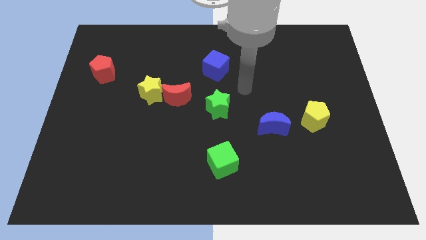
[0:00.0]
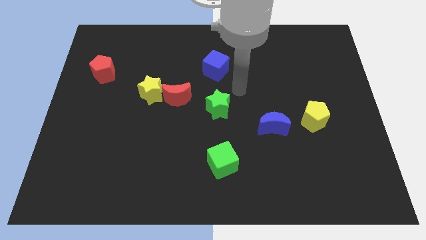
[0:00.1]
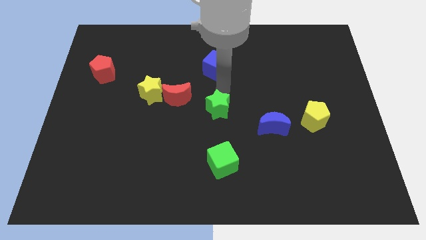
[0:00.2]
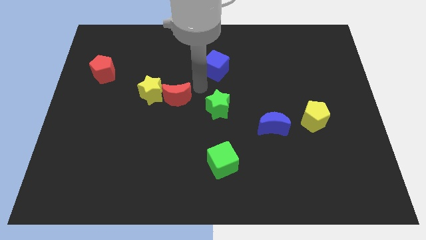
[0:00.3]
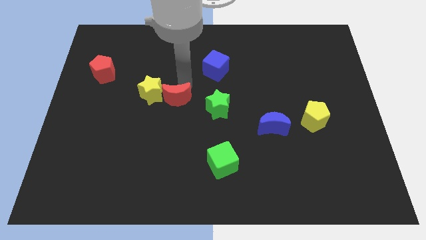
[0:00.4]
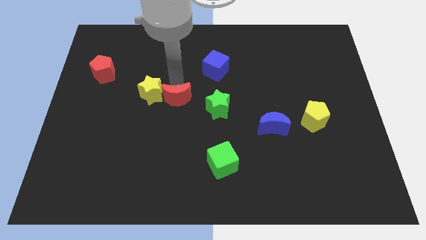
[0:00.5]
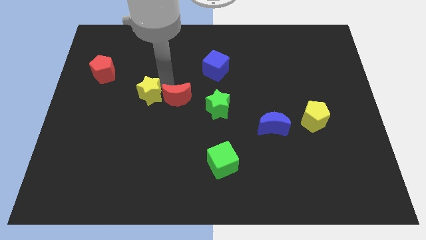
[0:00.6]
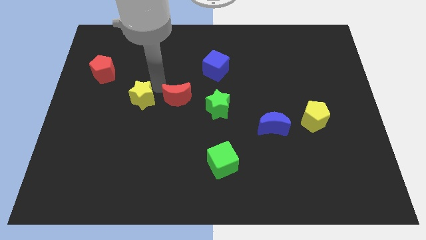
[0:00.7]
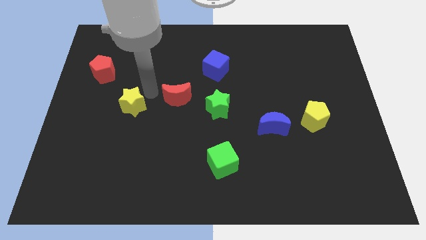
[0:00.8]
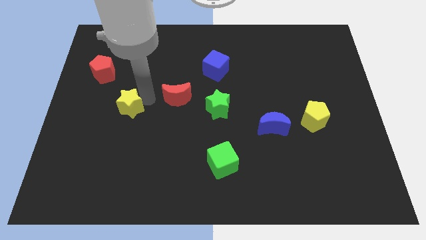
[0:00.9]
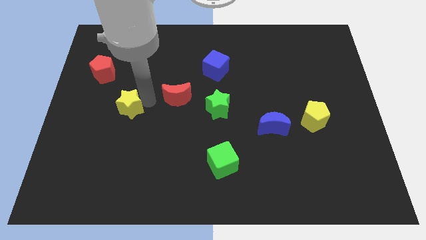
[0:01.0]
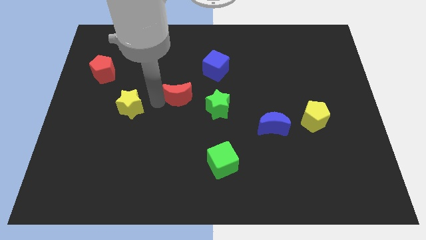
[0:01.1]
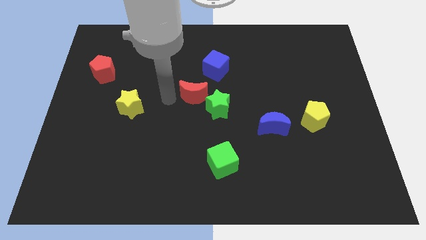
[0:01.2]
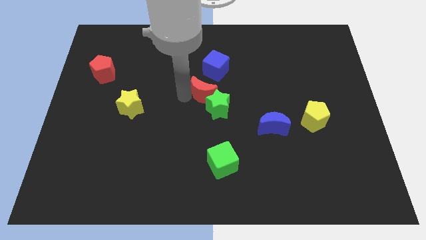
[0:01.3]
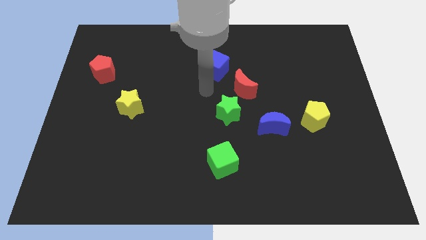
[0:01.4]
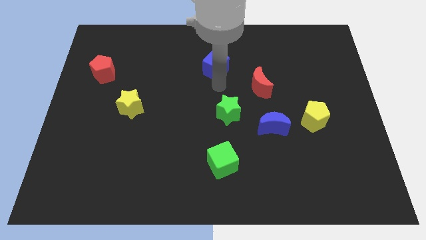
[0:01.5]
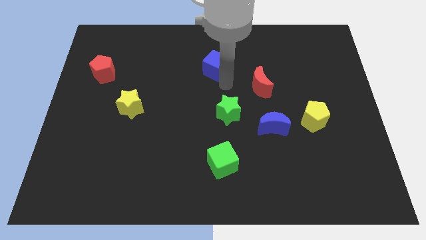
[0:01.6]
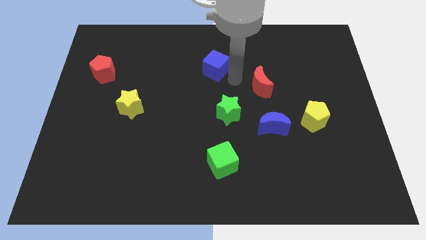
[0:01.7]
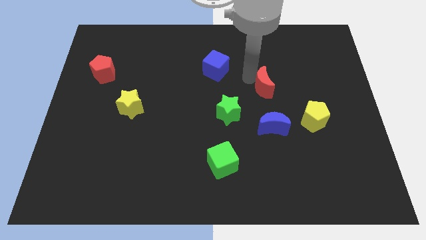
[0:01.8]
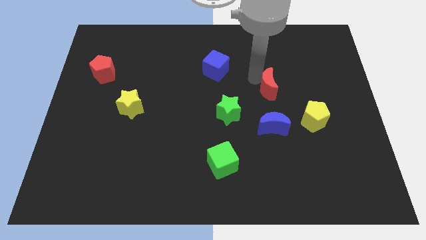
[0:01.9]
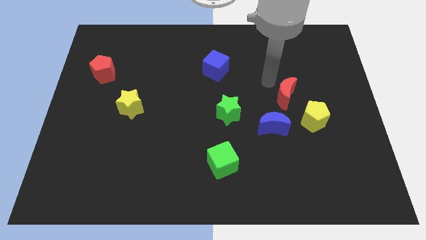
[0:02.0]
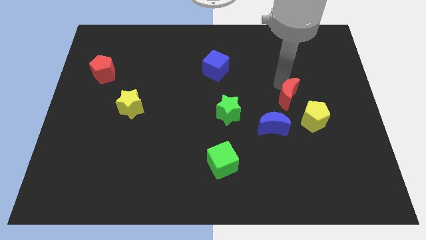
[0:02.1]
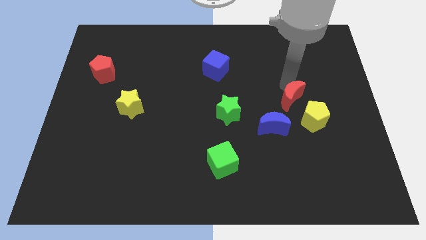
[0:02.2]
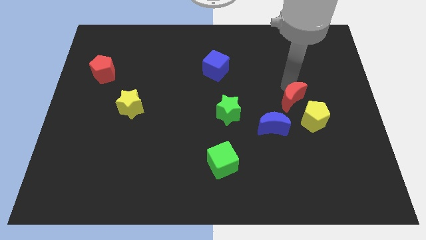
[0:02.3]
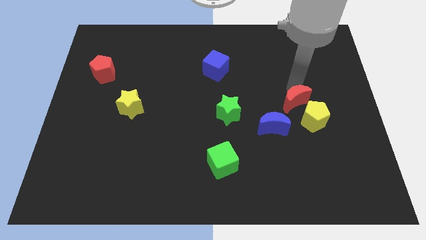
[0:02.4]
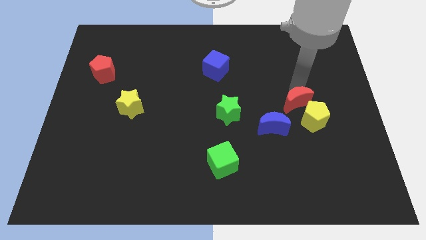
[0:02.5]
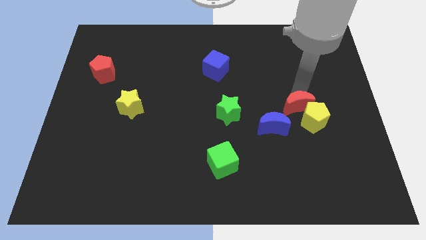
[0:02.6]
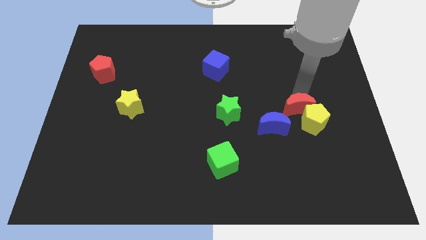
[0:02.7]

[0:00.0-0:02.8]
put the red moon towards the yellow pentagon

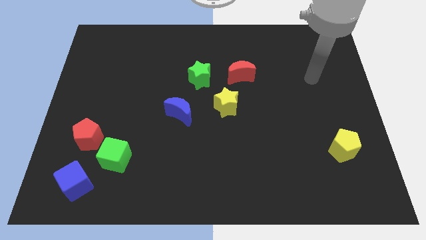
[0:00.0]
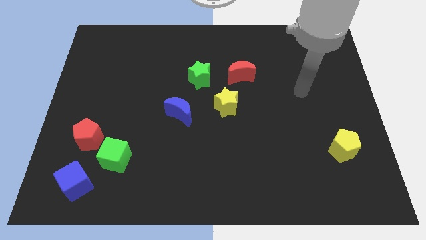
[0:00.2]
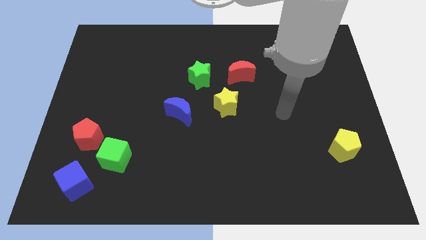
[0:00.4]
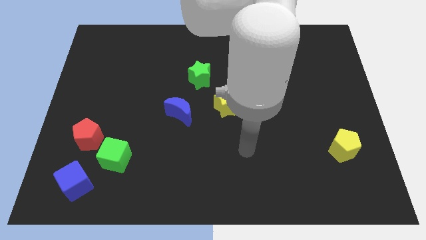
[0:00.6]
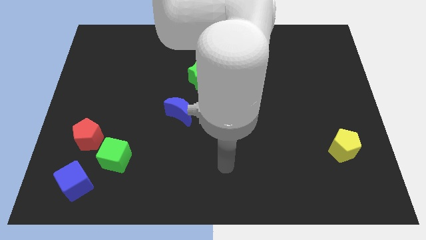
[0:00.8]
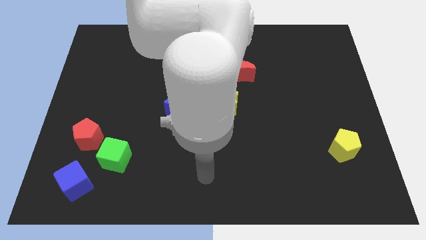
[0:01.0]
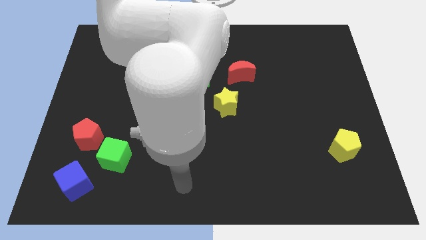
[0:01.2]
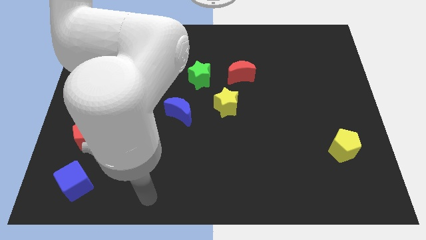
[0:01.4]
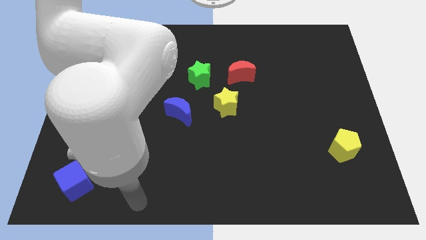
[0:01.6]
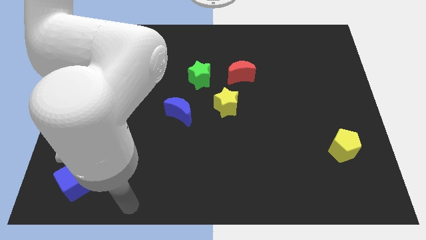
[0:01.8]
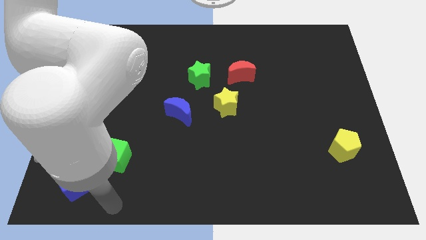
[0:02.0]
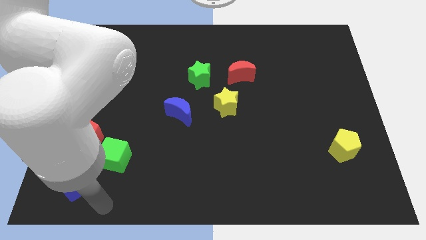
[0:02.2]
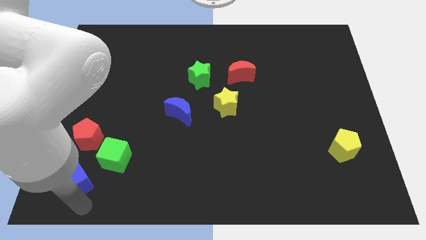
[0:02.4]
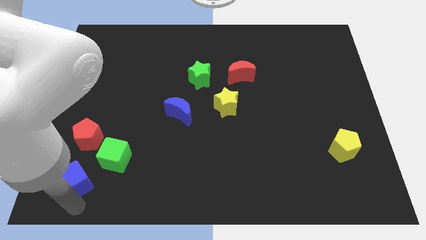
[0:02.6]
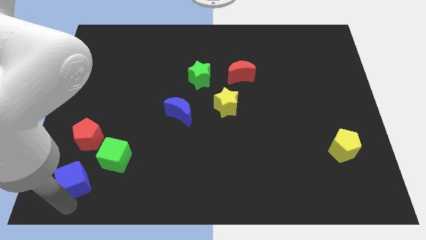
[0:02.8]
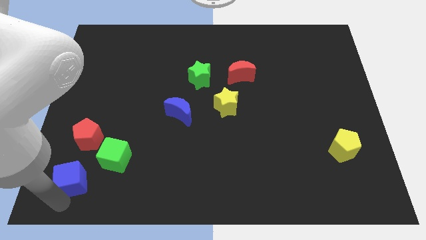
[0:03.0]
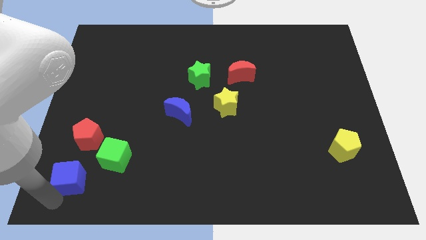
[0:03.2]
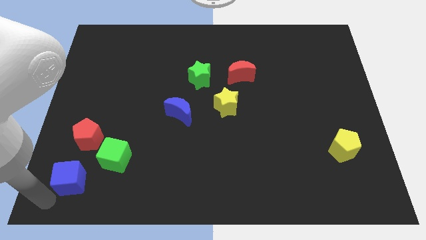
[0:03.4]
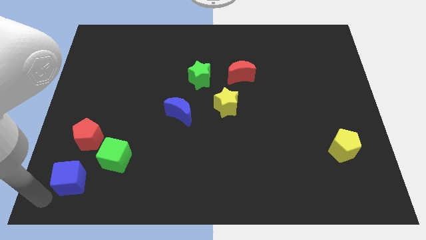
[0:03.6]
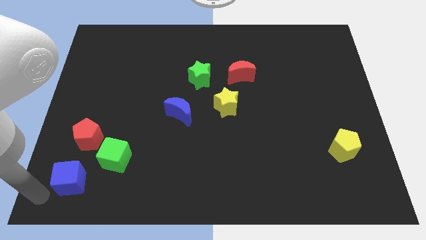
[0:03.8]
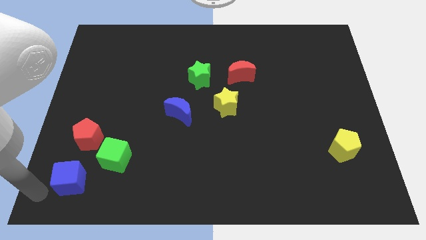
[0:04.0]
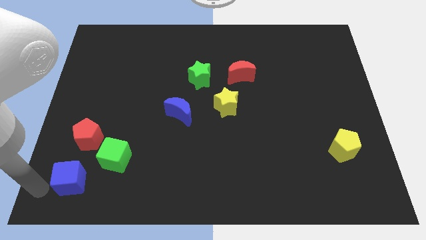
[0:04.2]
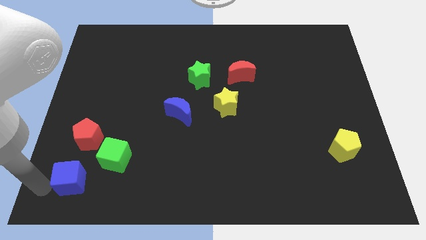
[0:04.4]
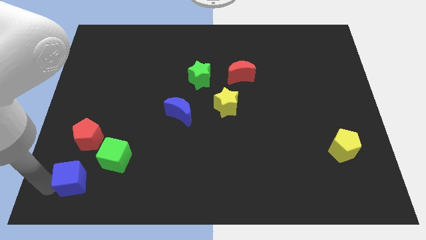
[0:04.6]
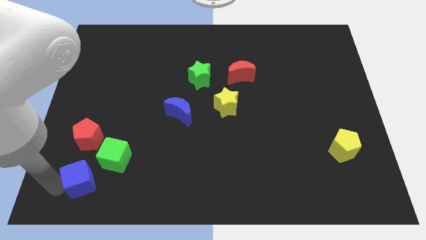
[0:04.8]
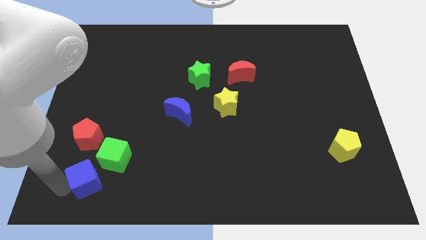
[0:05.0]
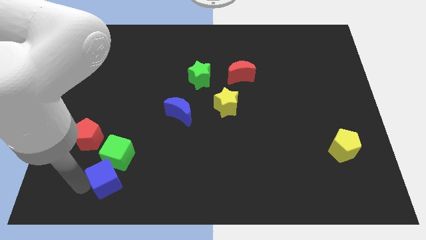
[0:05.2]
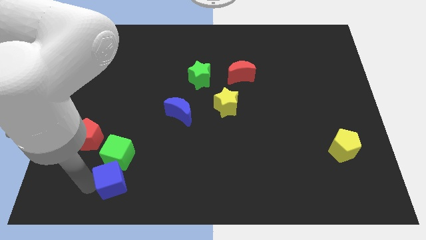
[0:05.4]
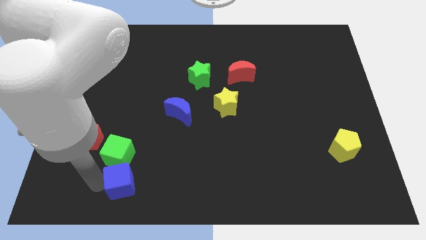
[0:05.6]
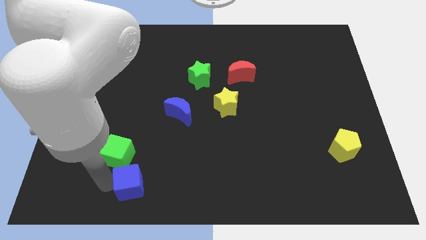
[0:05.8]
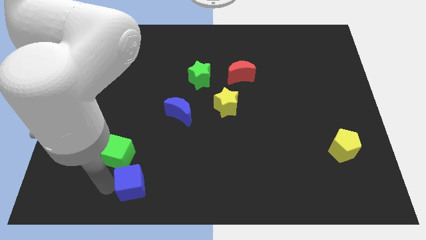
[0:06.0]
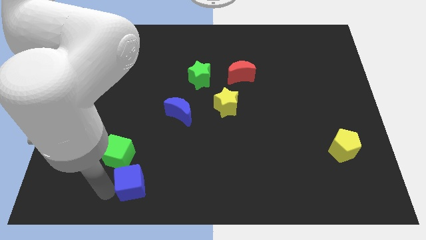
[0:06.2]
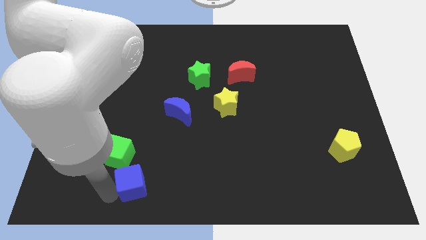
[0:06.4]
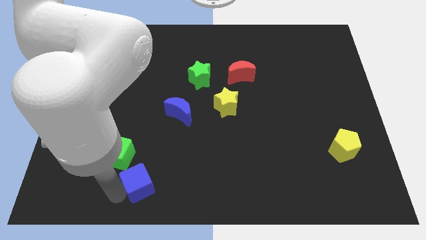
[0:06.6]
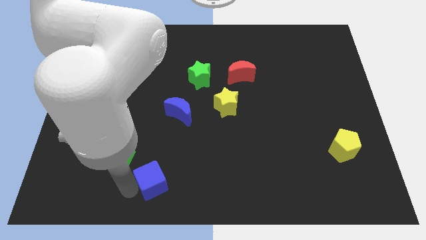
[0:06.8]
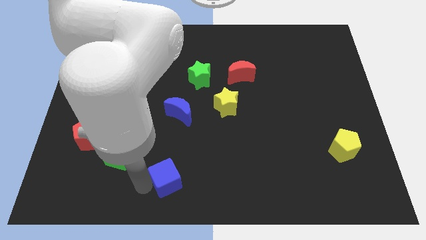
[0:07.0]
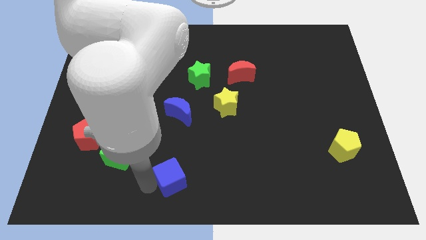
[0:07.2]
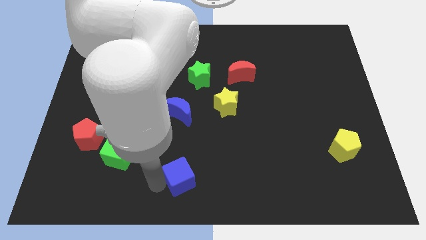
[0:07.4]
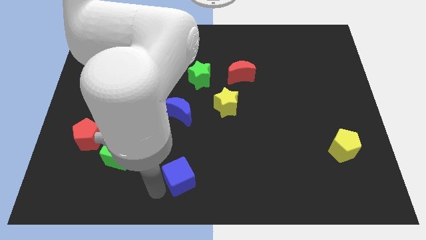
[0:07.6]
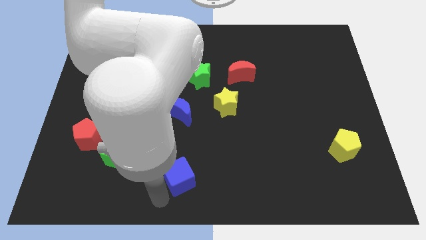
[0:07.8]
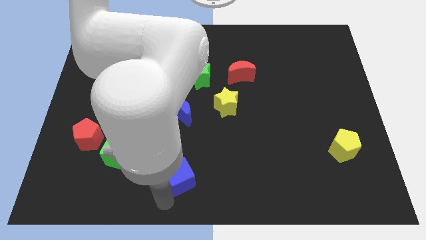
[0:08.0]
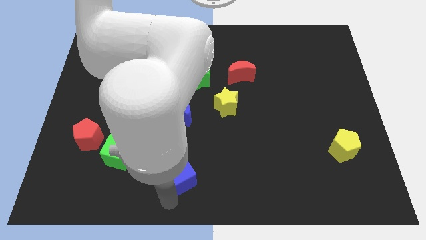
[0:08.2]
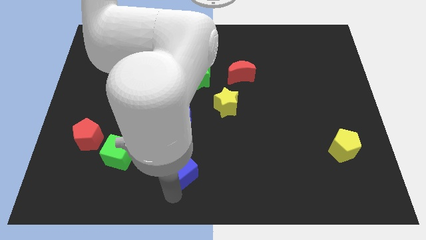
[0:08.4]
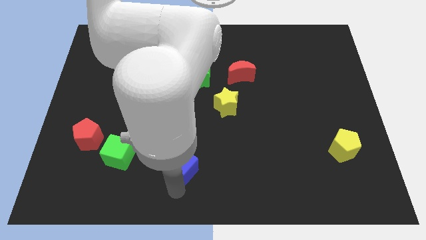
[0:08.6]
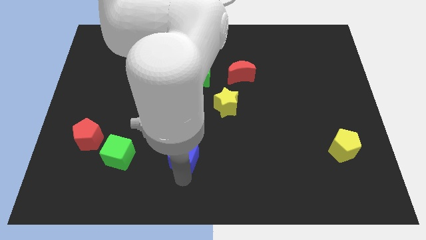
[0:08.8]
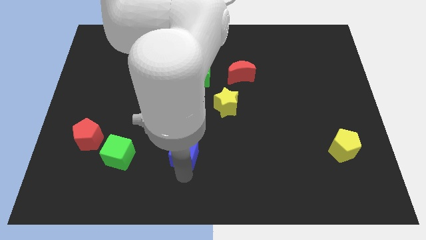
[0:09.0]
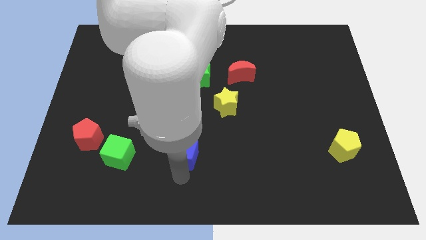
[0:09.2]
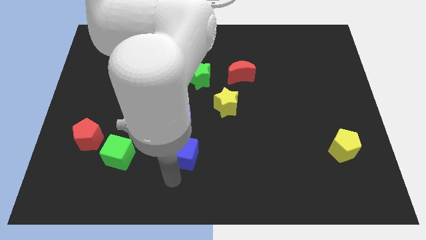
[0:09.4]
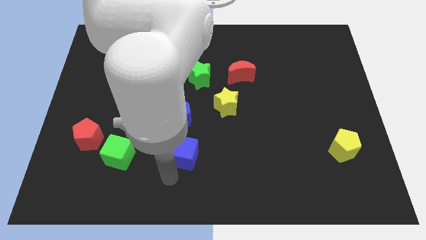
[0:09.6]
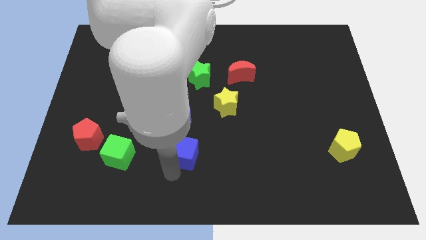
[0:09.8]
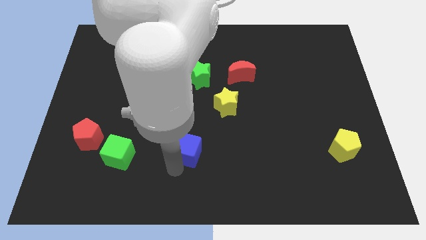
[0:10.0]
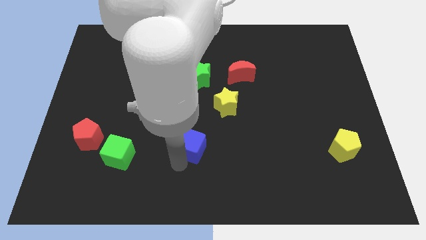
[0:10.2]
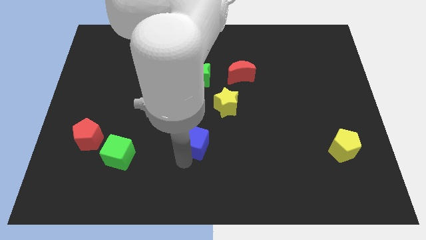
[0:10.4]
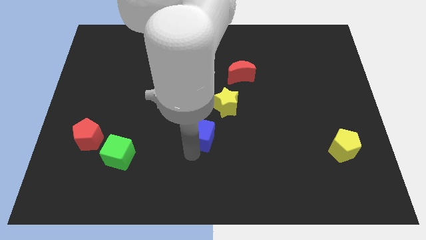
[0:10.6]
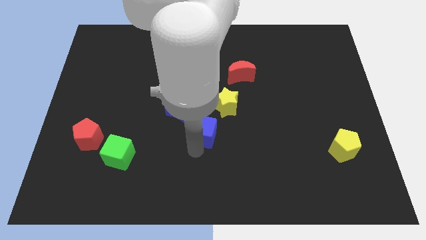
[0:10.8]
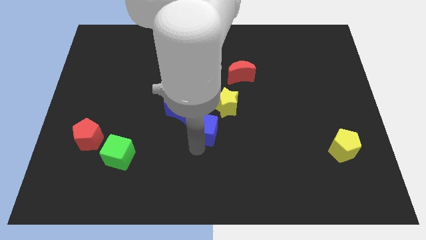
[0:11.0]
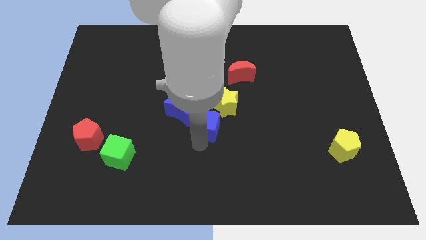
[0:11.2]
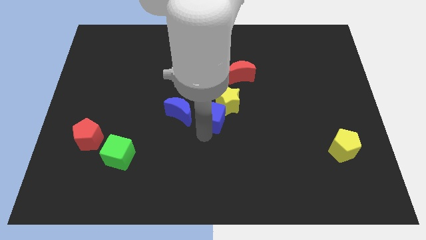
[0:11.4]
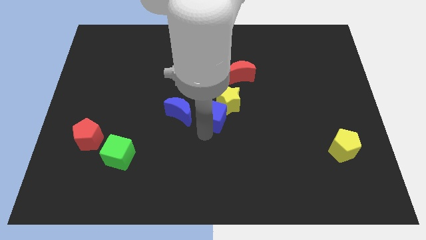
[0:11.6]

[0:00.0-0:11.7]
slide the blue cube to the yellow star

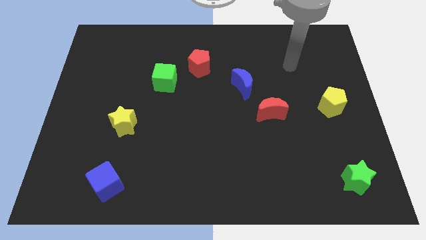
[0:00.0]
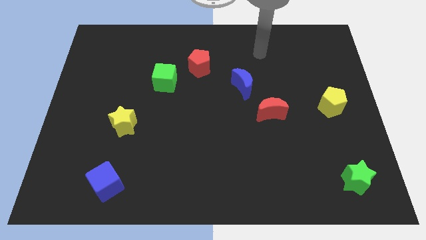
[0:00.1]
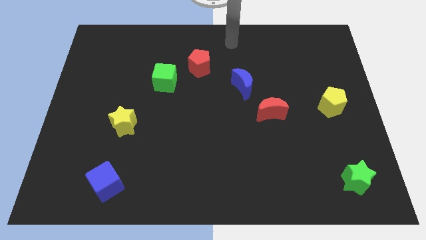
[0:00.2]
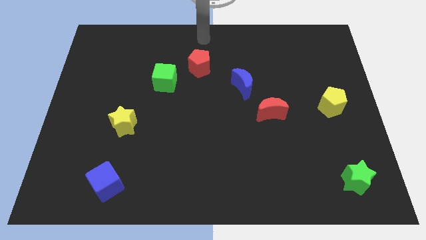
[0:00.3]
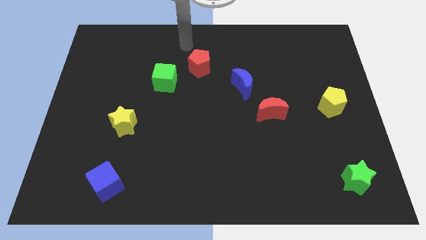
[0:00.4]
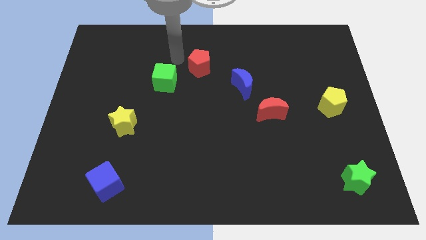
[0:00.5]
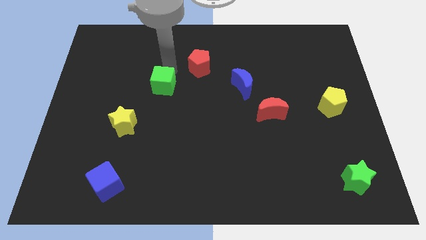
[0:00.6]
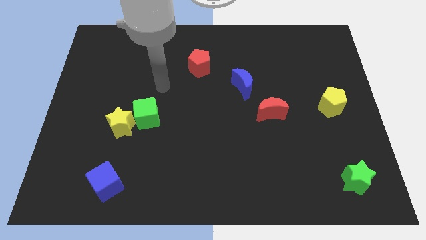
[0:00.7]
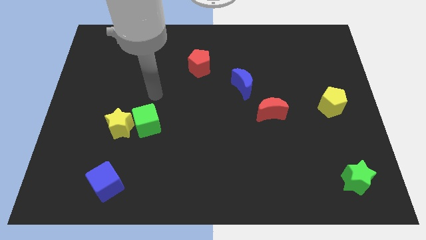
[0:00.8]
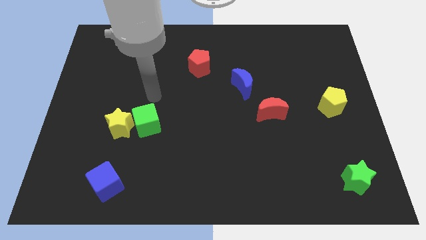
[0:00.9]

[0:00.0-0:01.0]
push the green cube next to the yellow star
